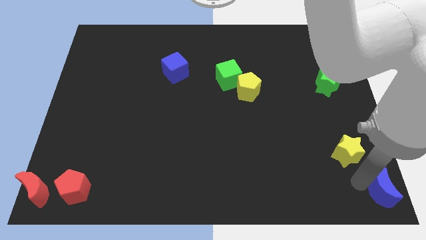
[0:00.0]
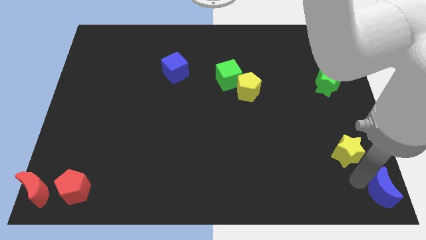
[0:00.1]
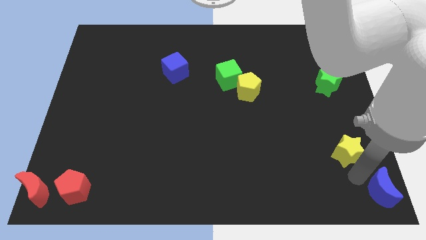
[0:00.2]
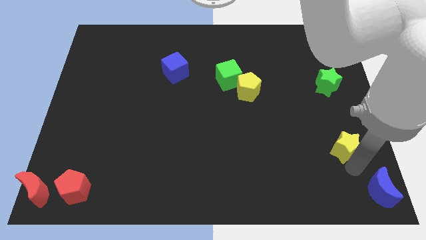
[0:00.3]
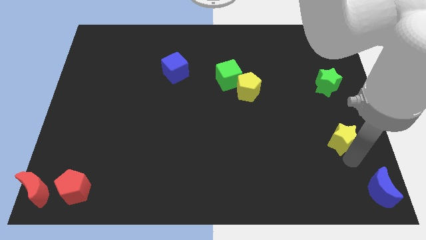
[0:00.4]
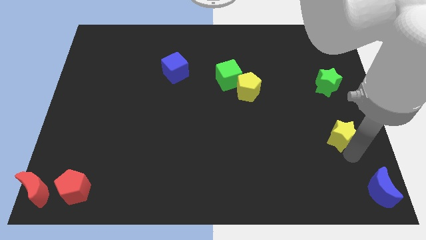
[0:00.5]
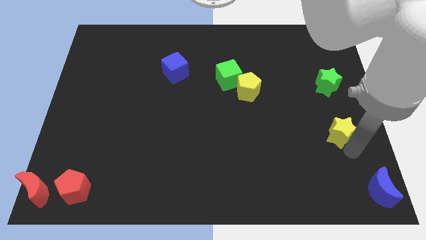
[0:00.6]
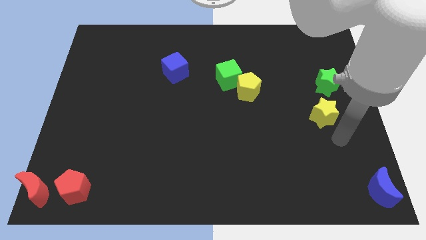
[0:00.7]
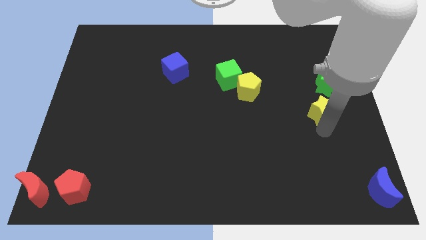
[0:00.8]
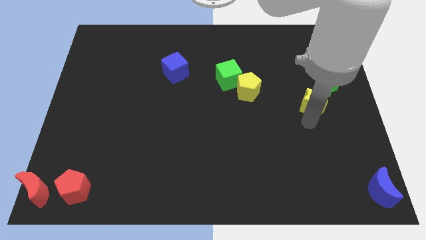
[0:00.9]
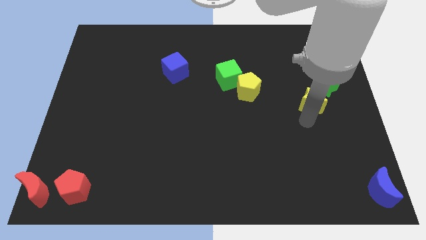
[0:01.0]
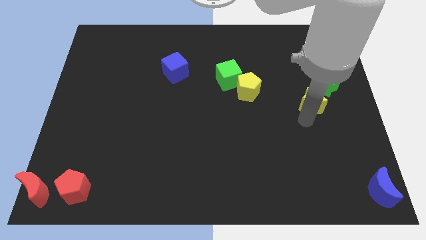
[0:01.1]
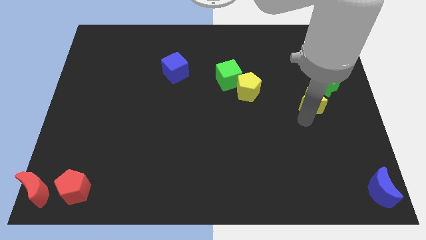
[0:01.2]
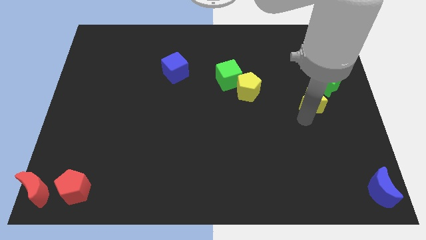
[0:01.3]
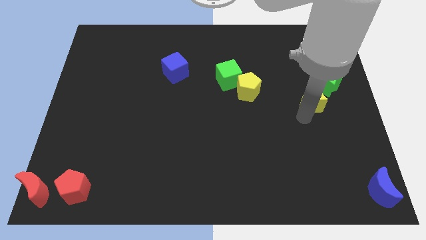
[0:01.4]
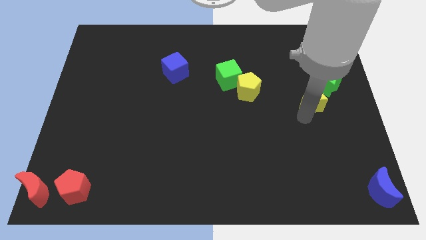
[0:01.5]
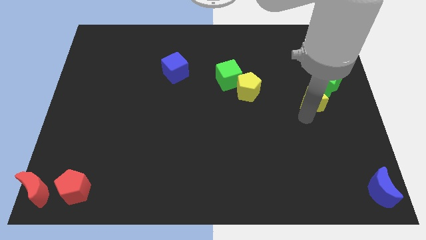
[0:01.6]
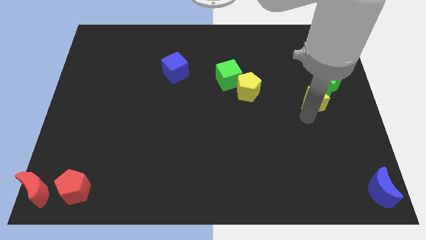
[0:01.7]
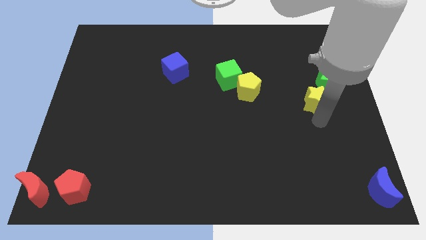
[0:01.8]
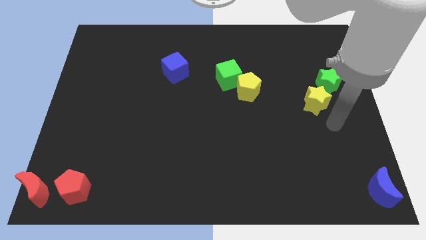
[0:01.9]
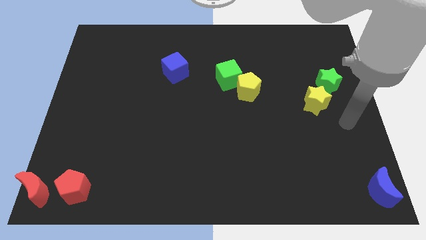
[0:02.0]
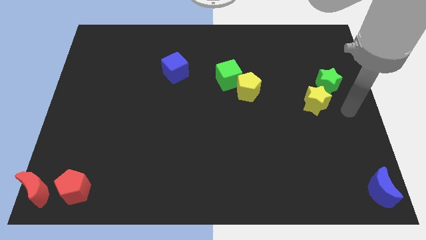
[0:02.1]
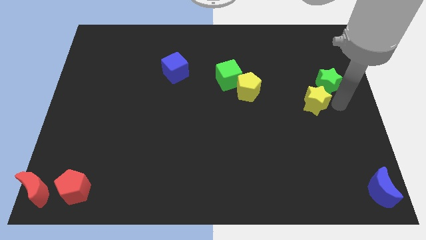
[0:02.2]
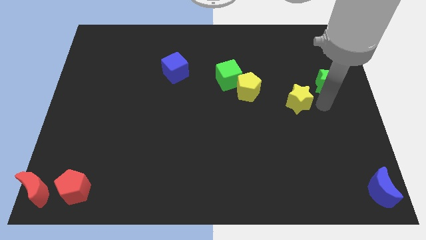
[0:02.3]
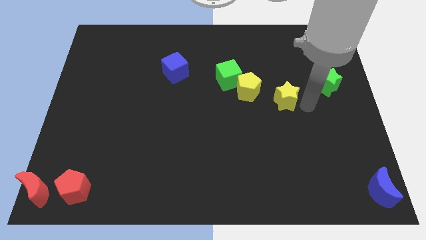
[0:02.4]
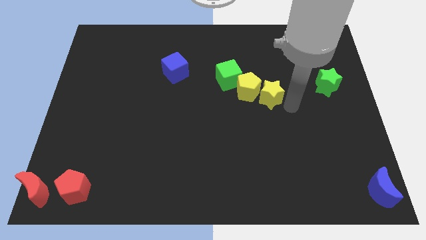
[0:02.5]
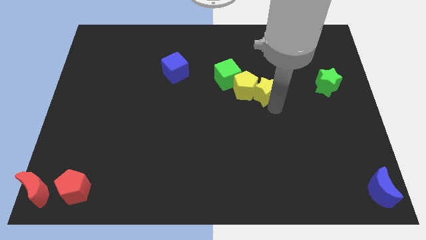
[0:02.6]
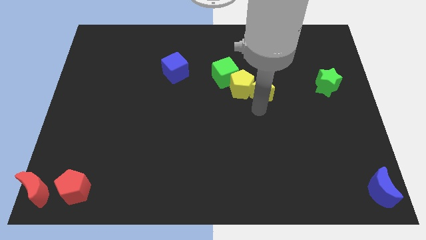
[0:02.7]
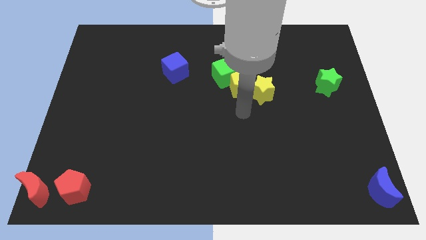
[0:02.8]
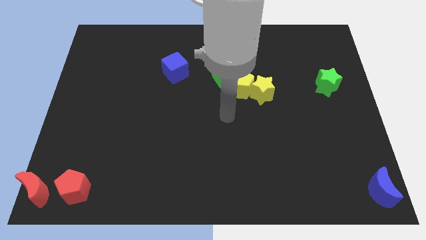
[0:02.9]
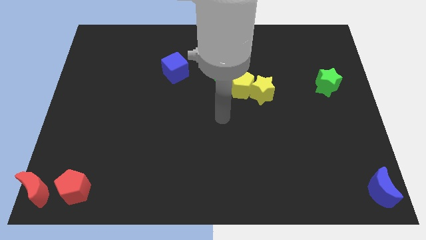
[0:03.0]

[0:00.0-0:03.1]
move the yellow star into the yellow pentagon

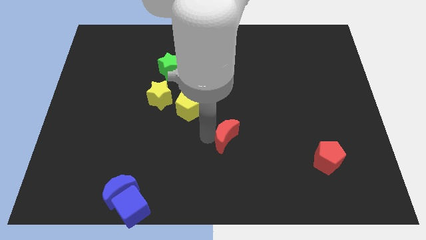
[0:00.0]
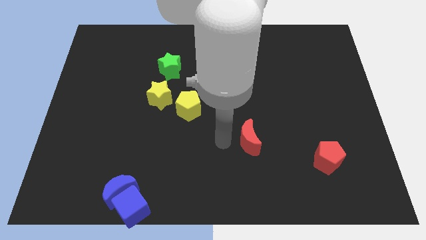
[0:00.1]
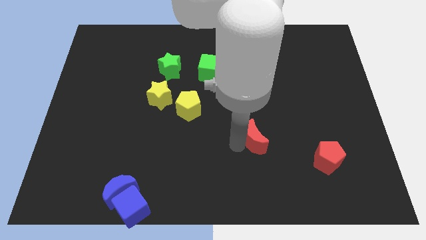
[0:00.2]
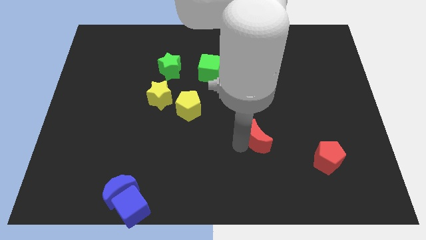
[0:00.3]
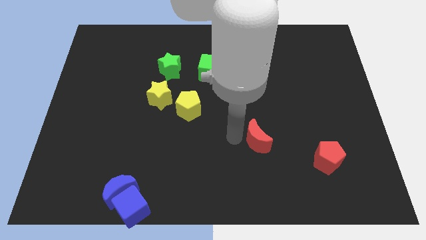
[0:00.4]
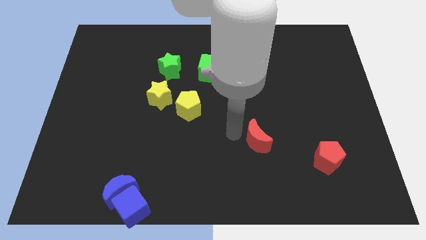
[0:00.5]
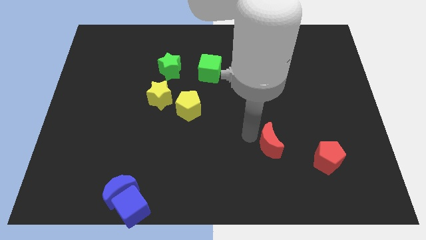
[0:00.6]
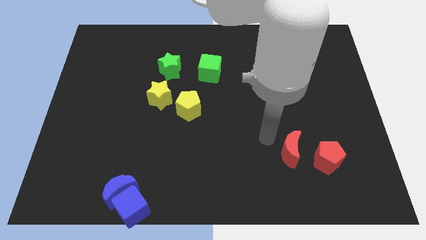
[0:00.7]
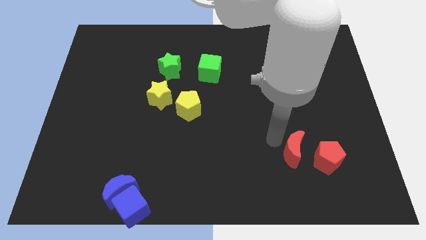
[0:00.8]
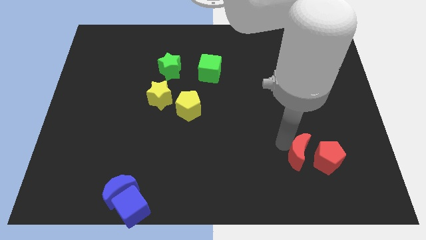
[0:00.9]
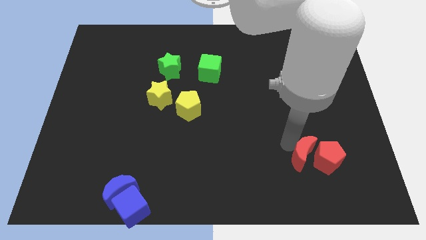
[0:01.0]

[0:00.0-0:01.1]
place red moon to the left of red pentagon

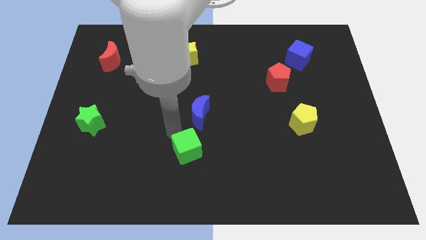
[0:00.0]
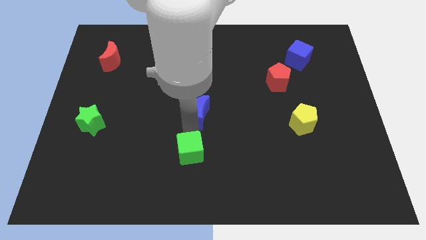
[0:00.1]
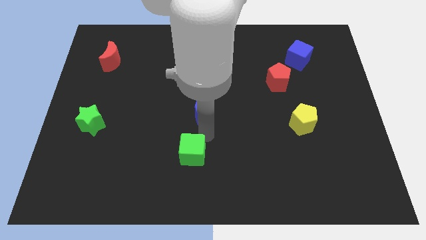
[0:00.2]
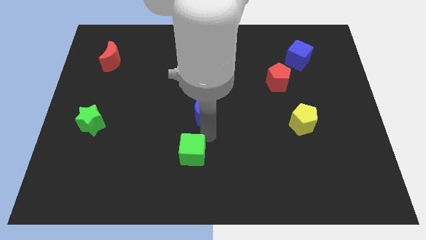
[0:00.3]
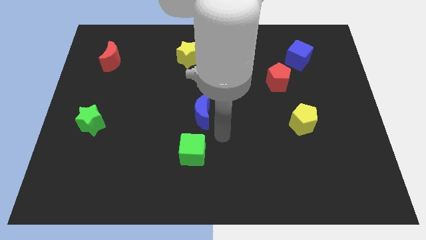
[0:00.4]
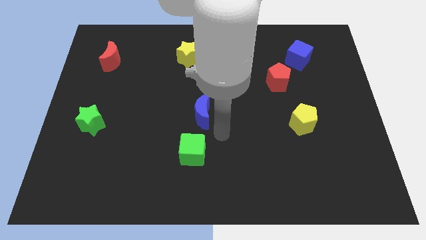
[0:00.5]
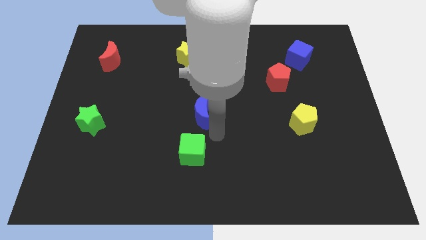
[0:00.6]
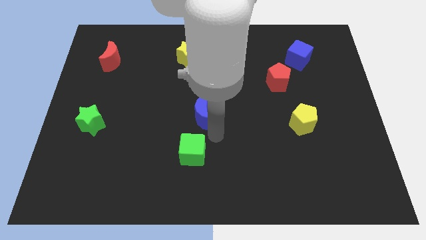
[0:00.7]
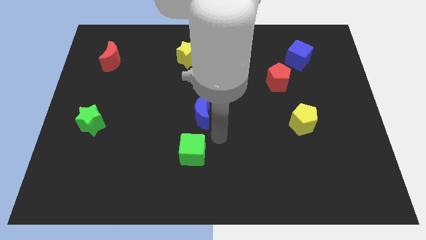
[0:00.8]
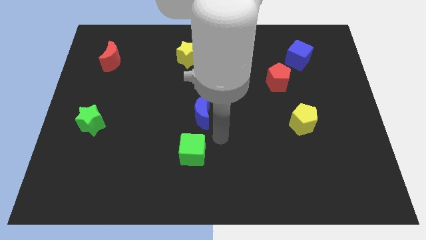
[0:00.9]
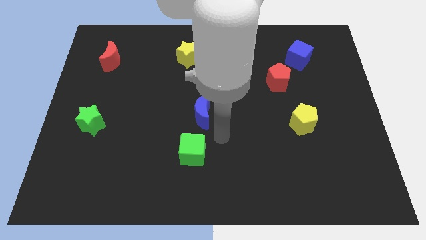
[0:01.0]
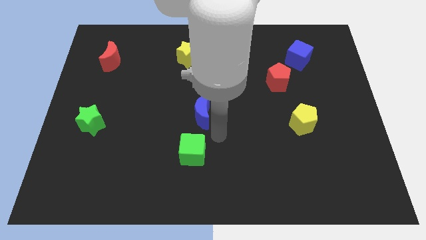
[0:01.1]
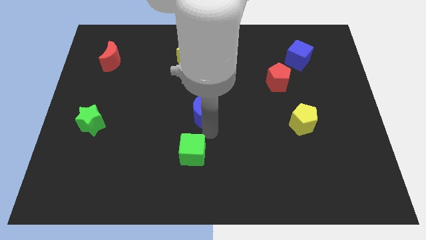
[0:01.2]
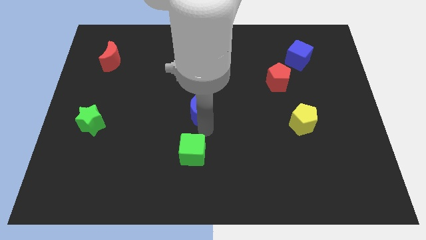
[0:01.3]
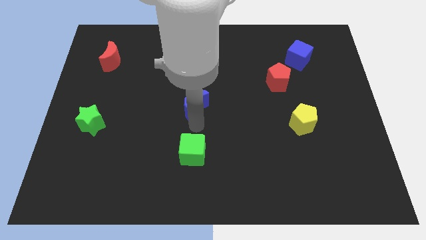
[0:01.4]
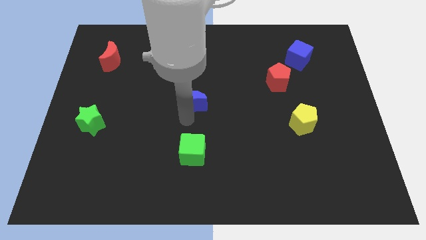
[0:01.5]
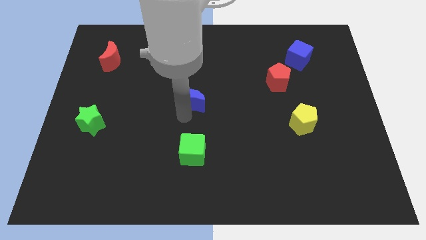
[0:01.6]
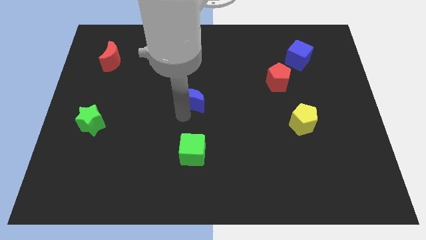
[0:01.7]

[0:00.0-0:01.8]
adjust the green cube and blue crescent vertical to each other

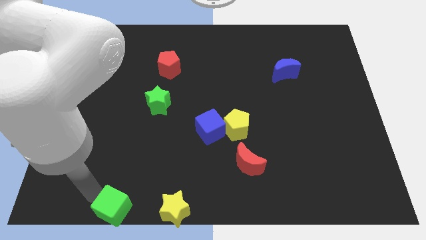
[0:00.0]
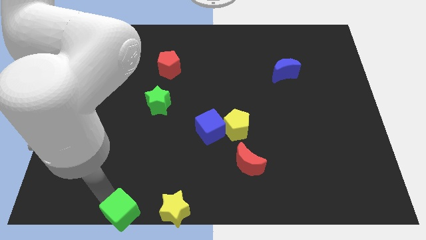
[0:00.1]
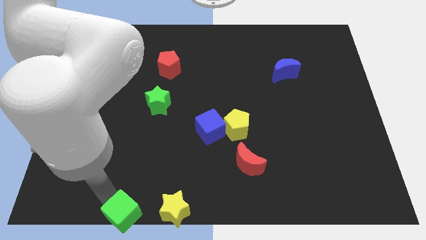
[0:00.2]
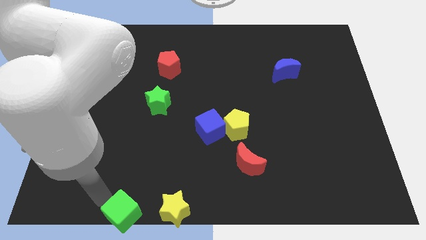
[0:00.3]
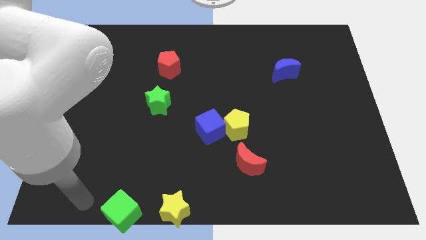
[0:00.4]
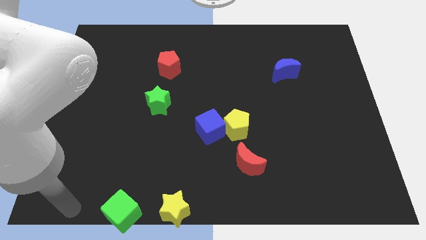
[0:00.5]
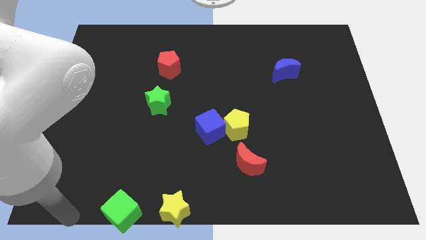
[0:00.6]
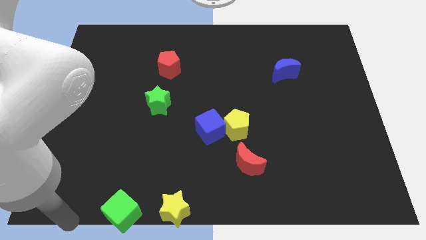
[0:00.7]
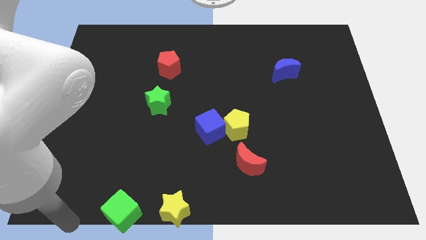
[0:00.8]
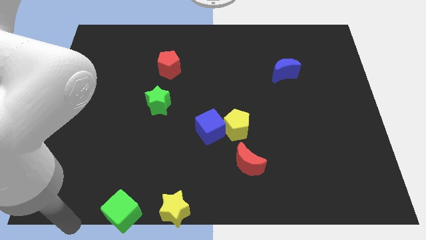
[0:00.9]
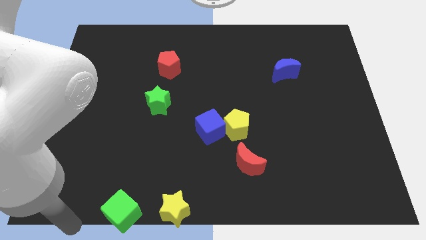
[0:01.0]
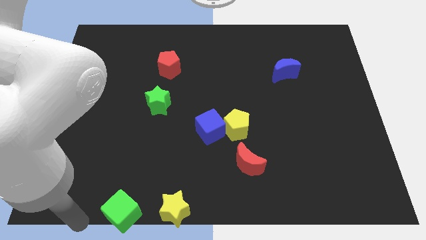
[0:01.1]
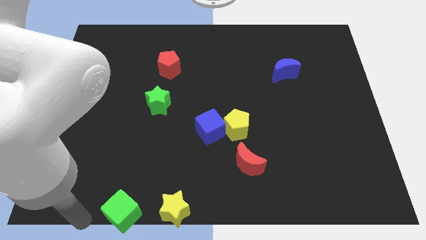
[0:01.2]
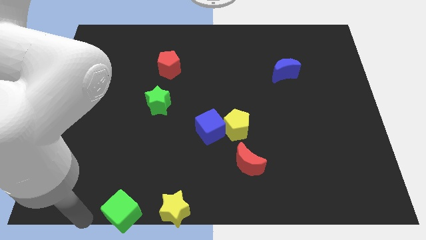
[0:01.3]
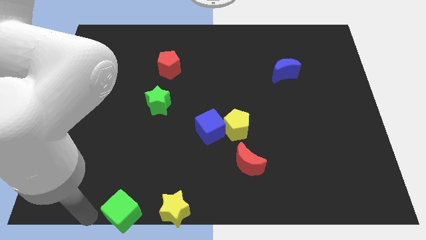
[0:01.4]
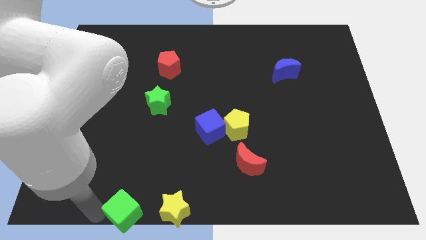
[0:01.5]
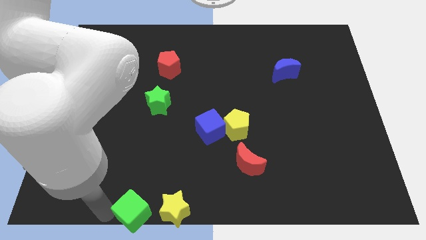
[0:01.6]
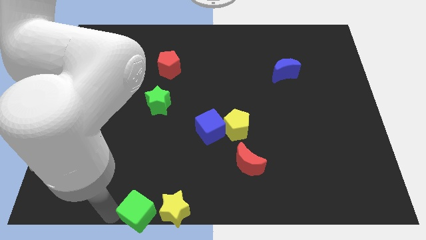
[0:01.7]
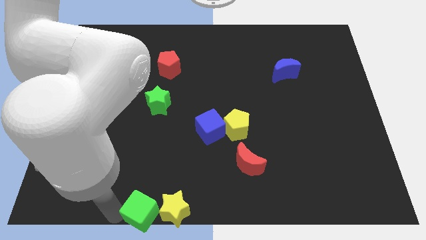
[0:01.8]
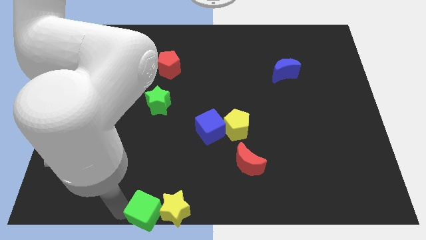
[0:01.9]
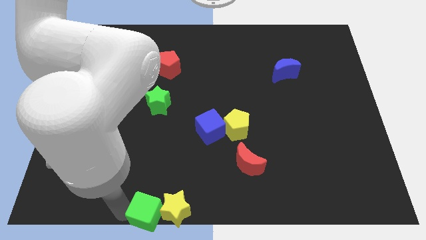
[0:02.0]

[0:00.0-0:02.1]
push the green cube into the yellow star

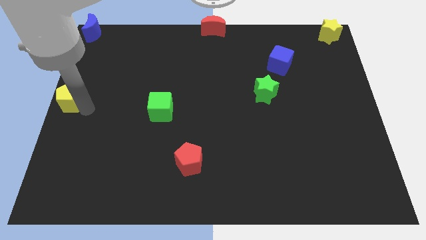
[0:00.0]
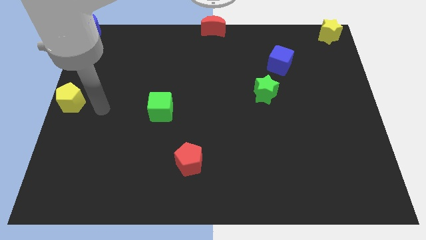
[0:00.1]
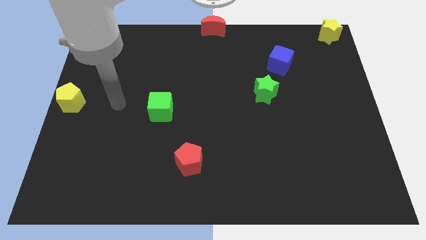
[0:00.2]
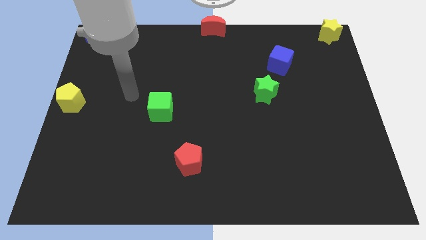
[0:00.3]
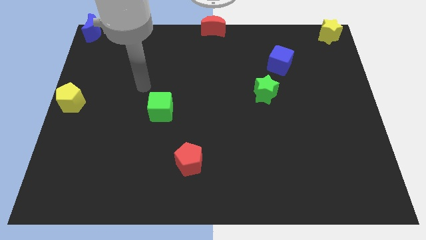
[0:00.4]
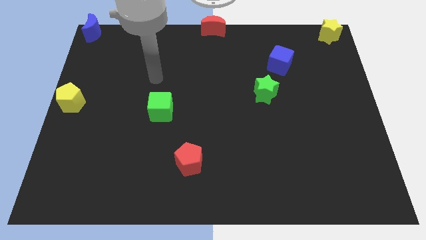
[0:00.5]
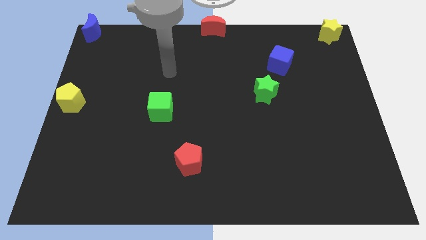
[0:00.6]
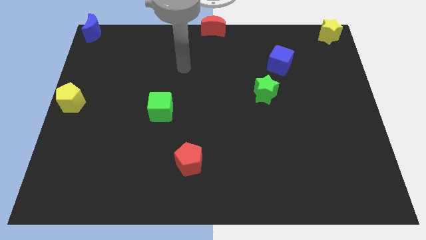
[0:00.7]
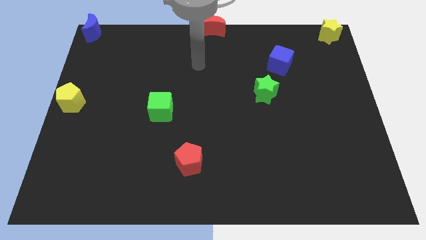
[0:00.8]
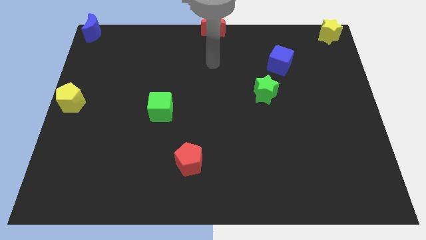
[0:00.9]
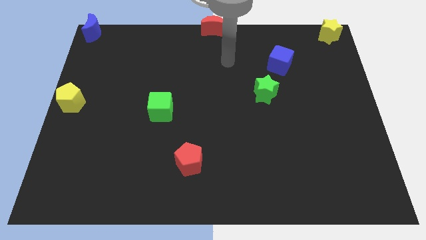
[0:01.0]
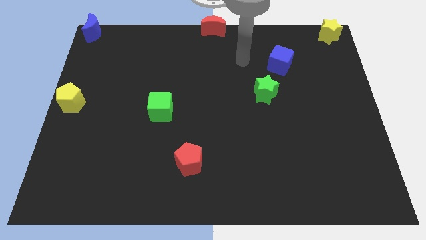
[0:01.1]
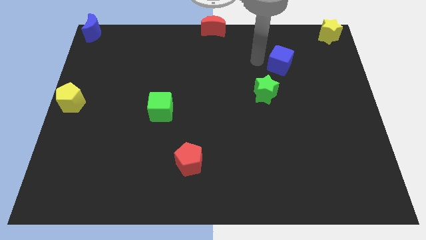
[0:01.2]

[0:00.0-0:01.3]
move your arm towards the left of blue cube
